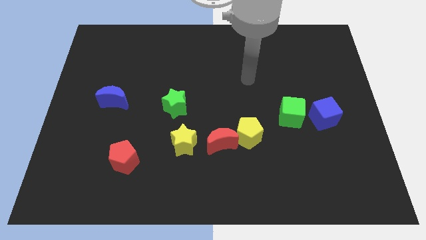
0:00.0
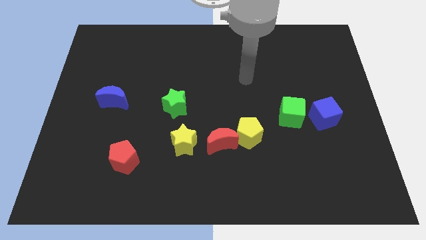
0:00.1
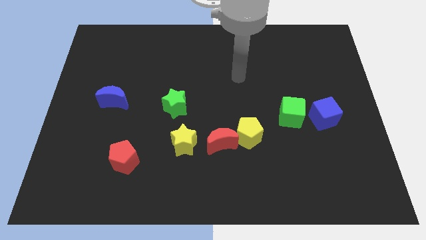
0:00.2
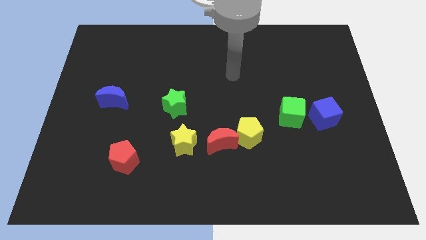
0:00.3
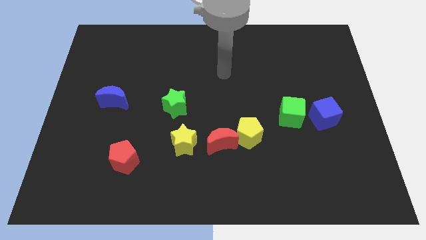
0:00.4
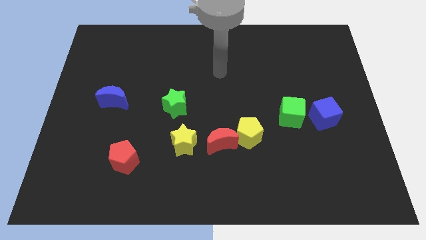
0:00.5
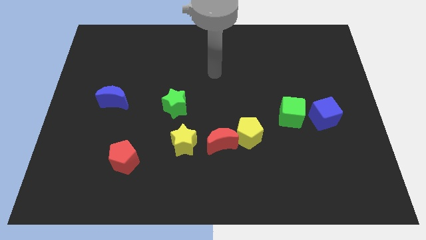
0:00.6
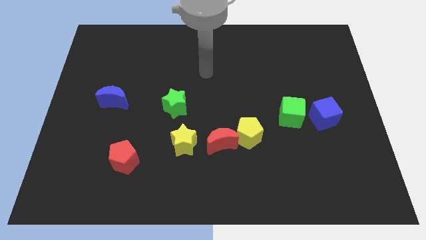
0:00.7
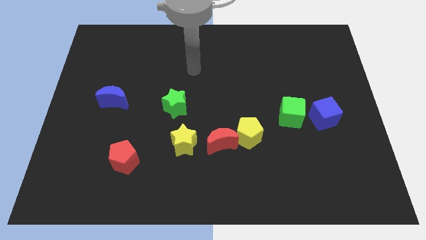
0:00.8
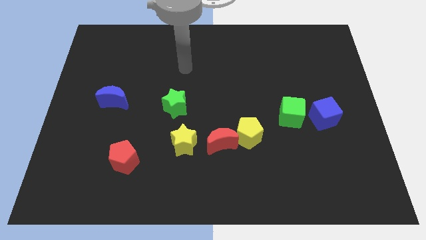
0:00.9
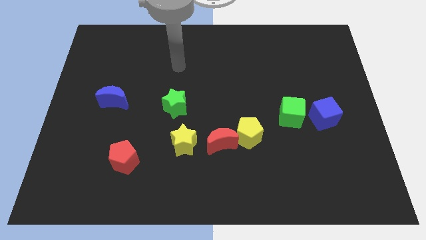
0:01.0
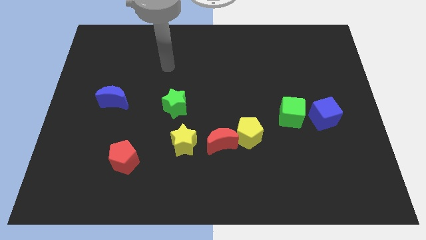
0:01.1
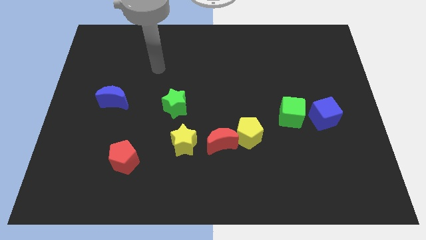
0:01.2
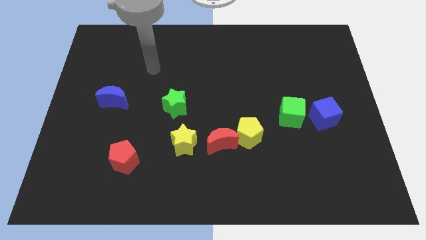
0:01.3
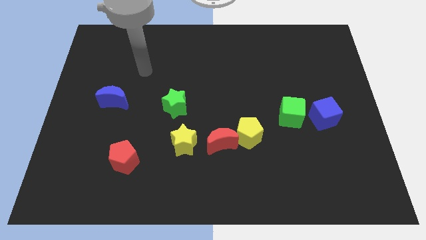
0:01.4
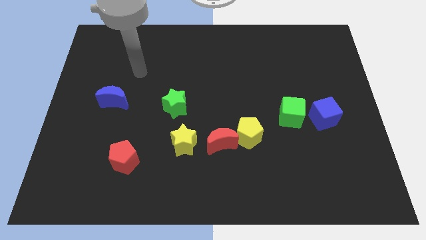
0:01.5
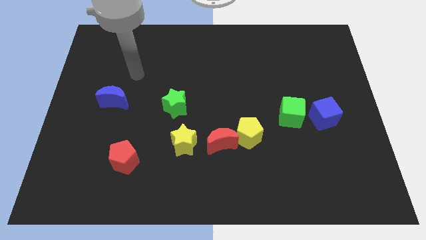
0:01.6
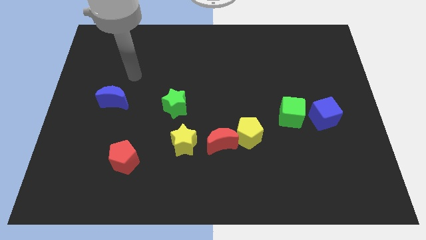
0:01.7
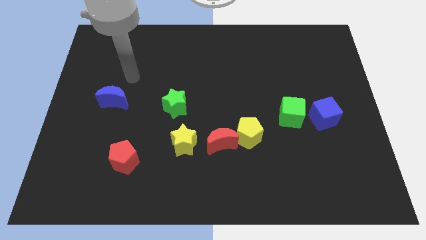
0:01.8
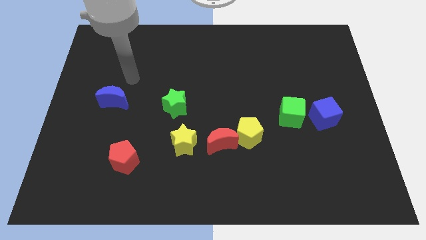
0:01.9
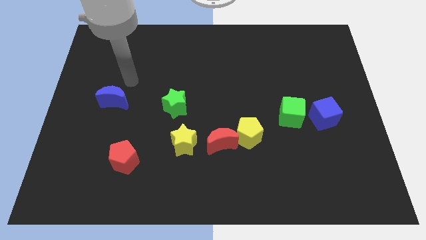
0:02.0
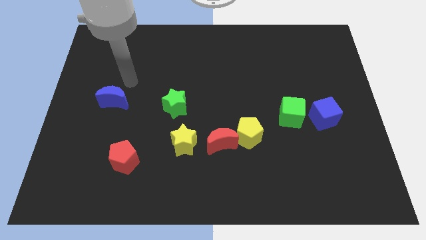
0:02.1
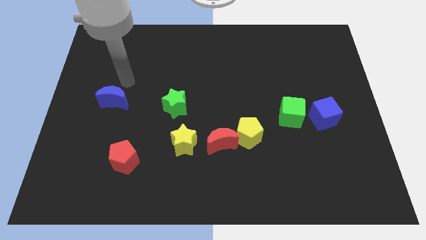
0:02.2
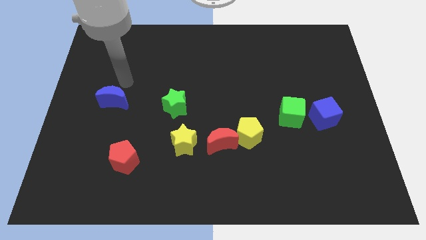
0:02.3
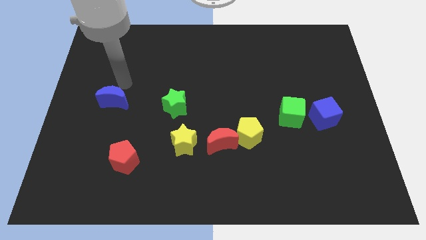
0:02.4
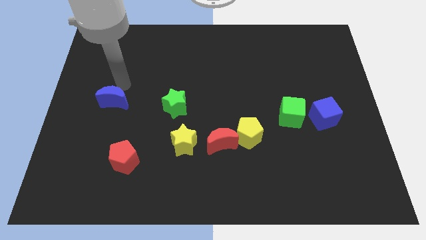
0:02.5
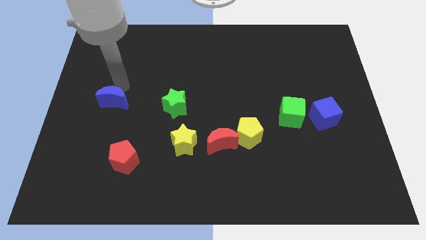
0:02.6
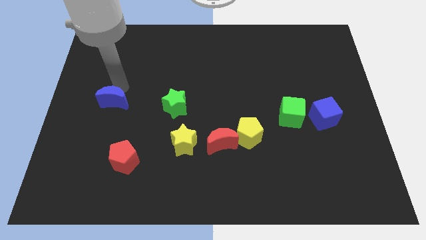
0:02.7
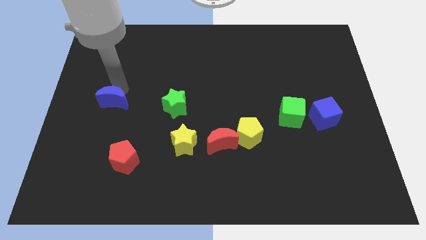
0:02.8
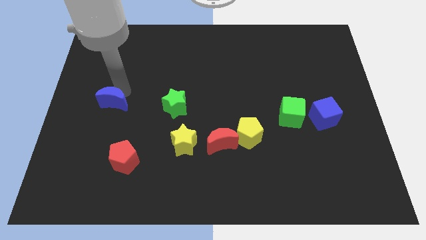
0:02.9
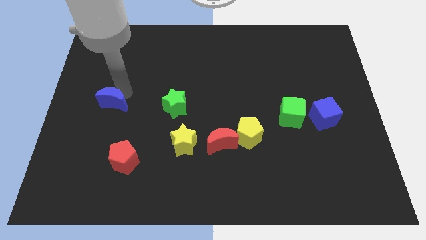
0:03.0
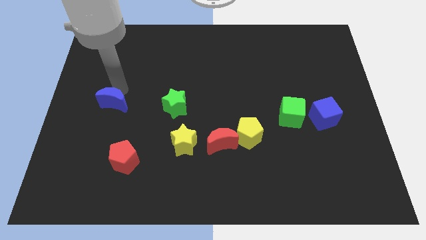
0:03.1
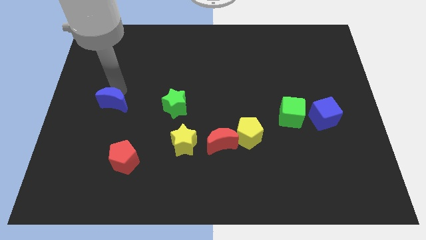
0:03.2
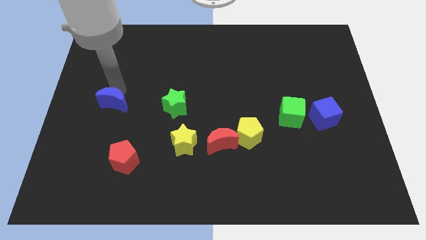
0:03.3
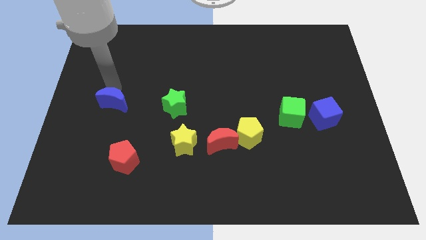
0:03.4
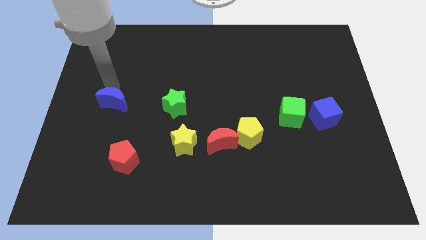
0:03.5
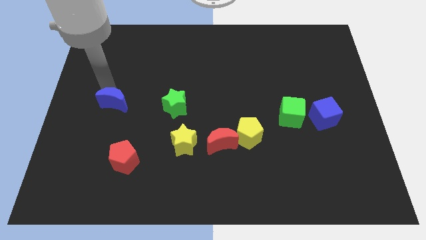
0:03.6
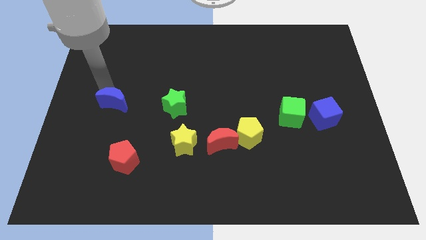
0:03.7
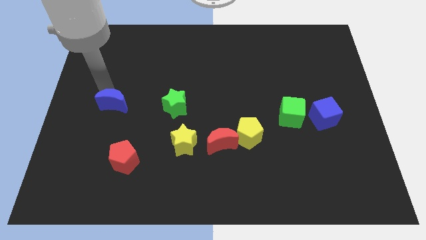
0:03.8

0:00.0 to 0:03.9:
move the blue crescent slightly to the bottom

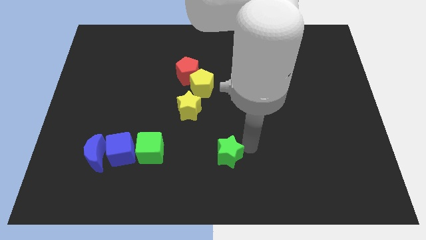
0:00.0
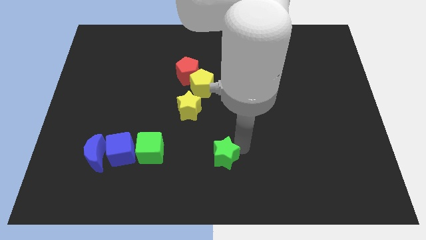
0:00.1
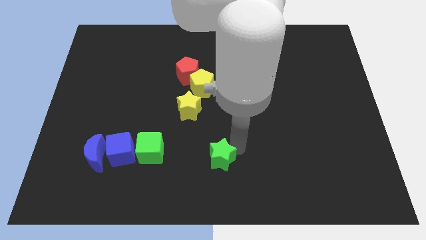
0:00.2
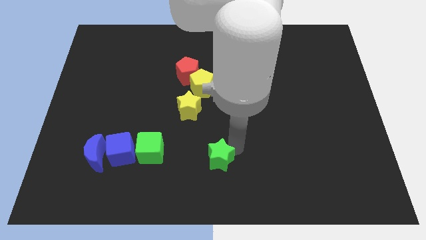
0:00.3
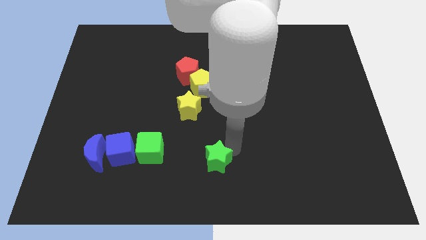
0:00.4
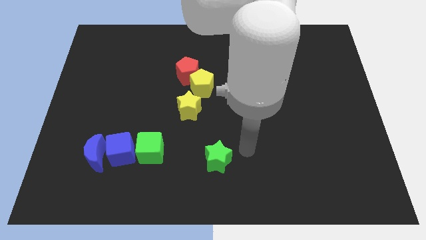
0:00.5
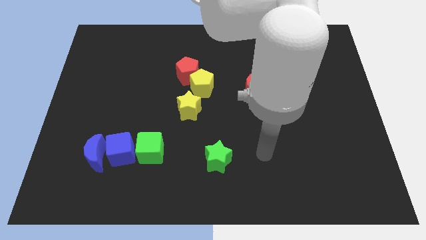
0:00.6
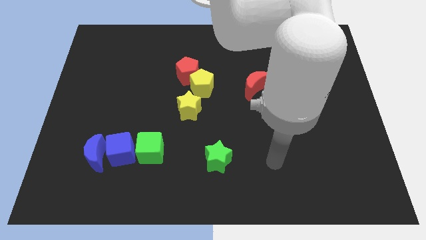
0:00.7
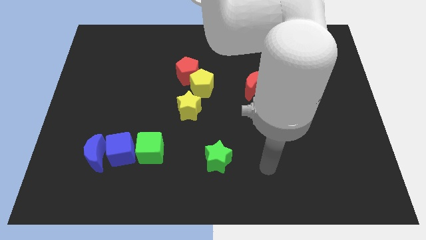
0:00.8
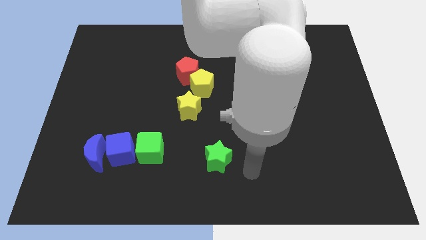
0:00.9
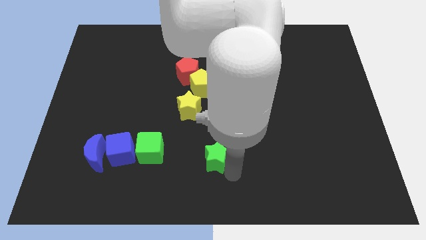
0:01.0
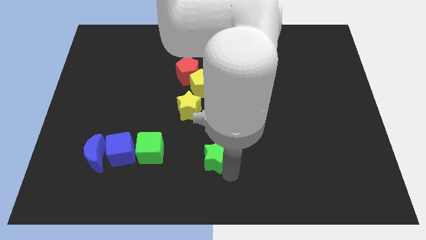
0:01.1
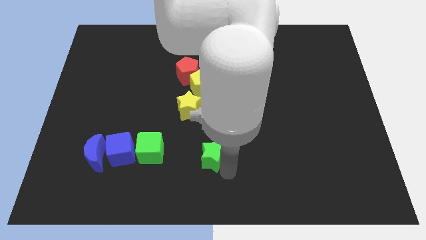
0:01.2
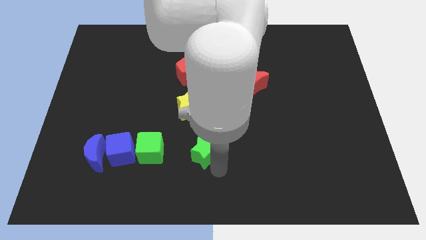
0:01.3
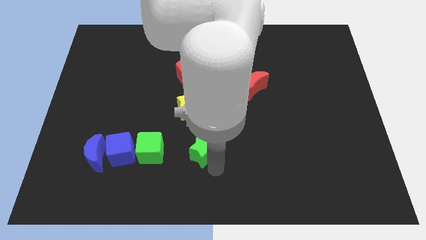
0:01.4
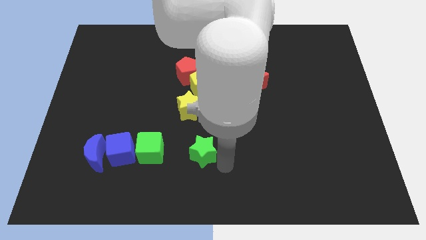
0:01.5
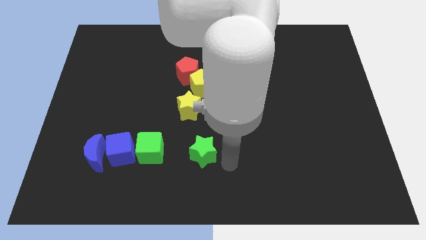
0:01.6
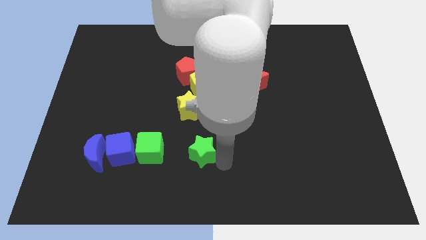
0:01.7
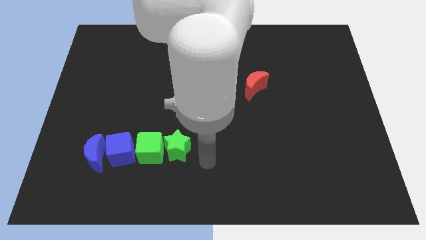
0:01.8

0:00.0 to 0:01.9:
place green star to the bottom of the yellow star

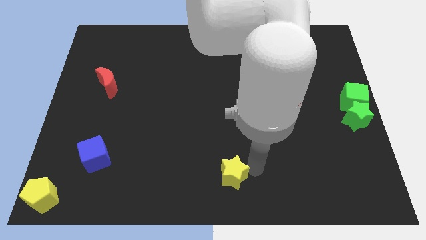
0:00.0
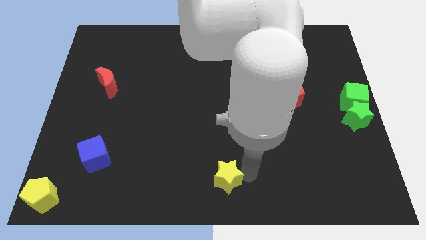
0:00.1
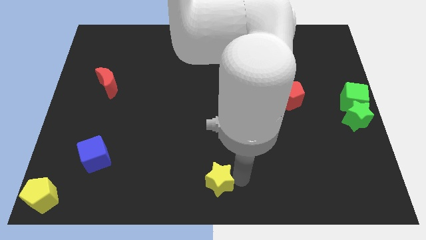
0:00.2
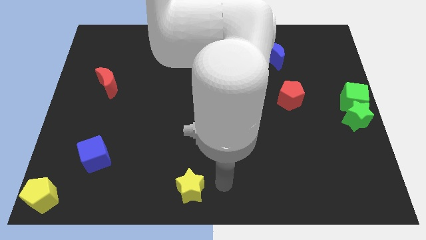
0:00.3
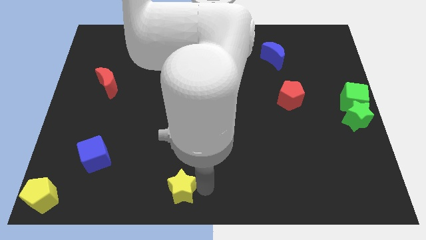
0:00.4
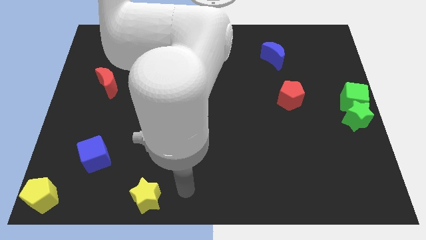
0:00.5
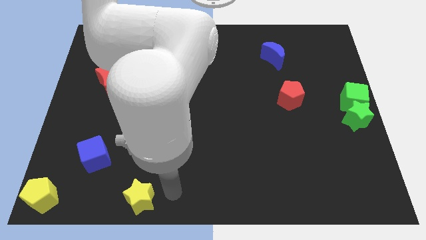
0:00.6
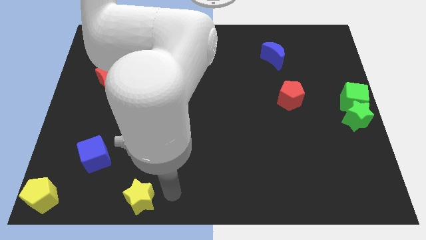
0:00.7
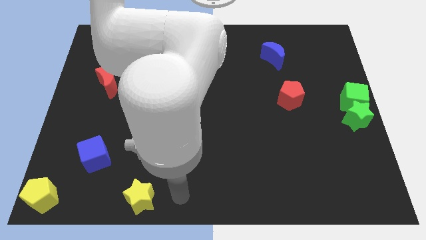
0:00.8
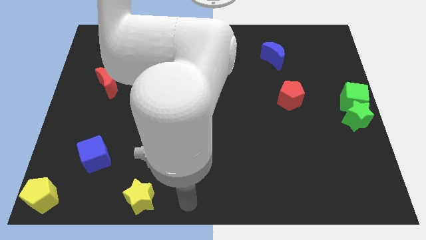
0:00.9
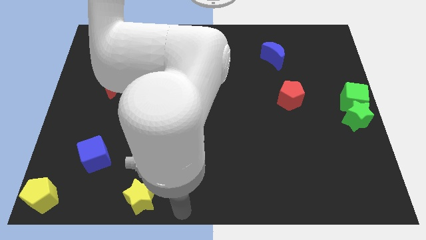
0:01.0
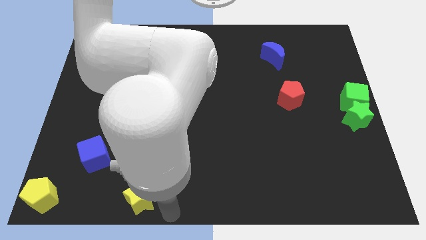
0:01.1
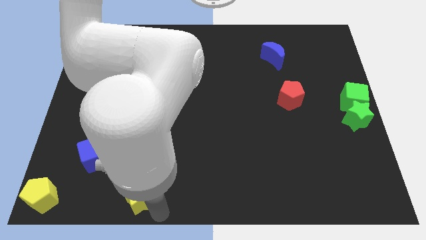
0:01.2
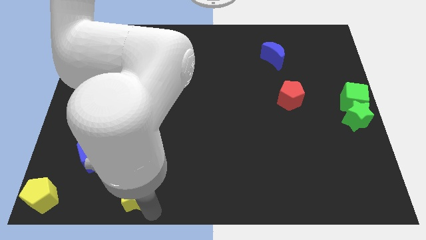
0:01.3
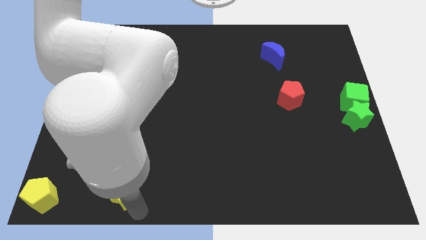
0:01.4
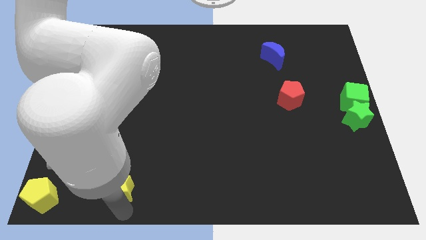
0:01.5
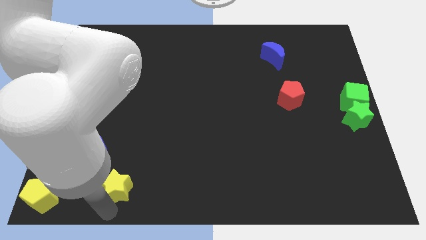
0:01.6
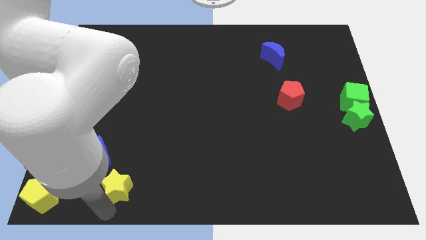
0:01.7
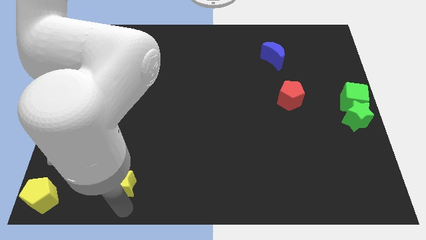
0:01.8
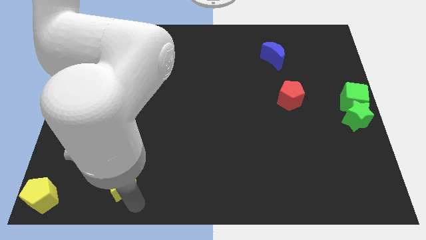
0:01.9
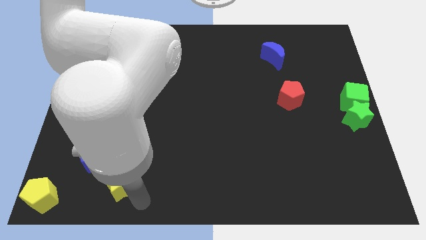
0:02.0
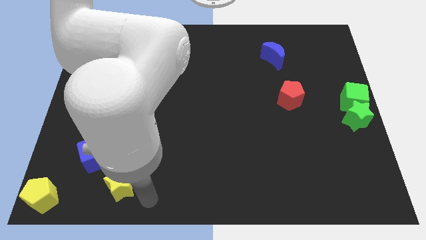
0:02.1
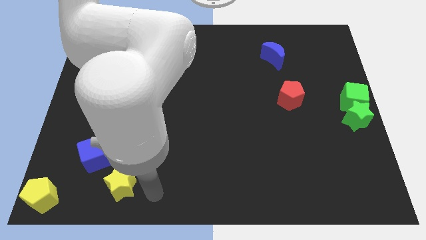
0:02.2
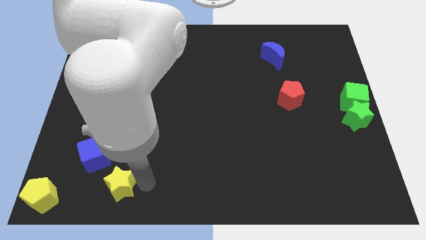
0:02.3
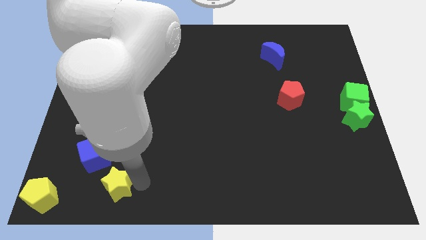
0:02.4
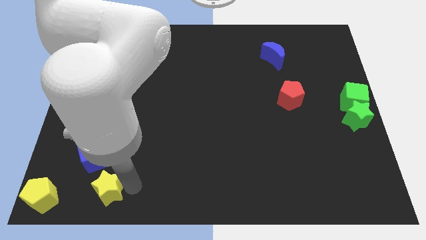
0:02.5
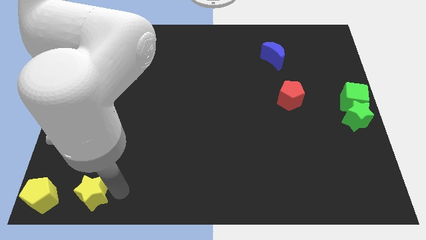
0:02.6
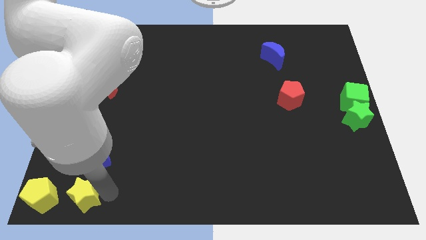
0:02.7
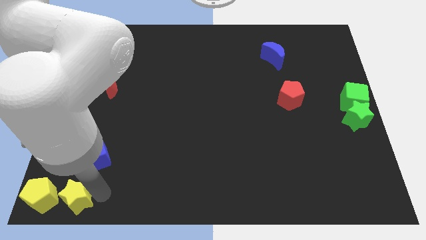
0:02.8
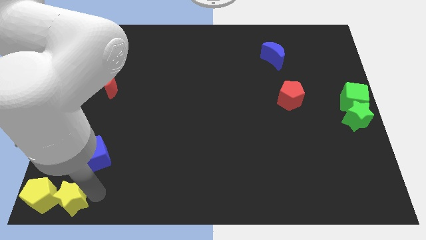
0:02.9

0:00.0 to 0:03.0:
place the yellow star to the right side of yellow pentagon
